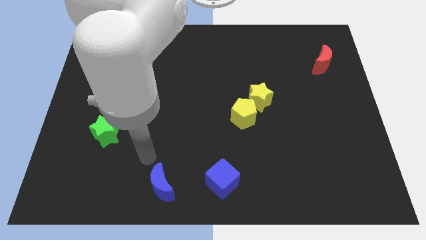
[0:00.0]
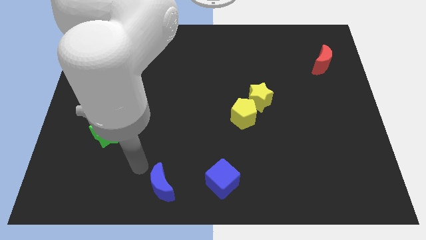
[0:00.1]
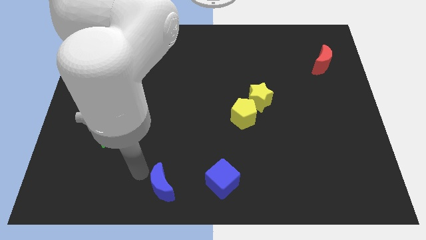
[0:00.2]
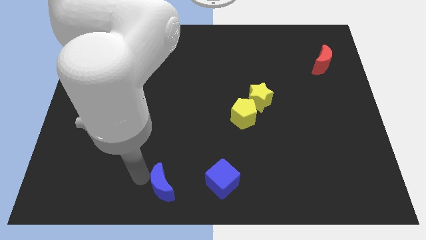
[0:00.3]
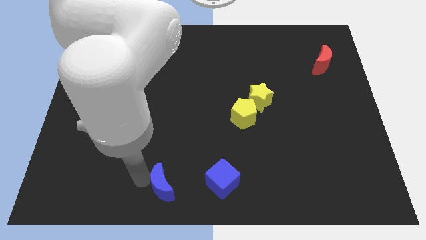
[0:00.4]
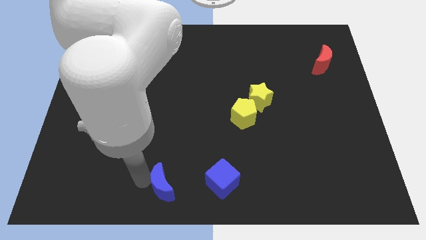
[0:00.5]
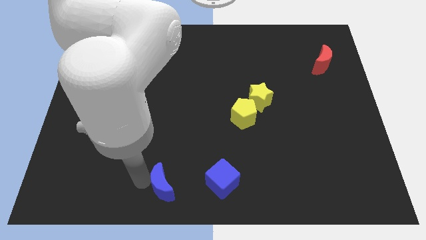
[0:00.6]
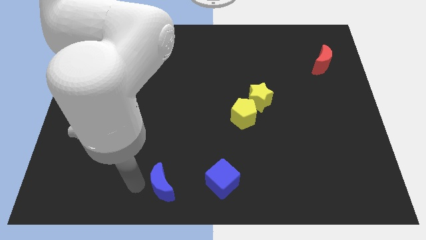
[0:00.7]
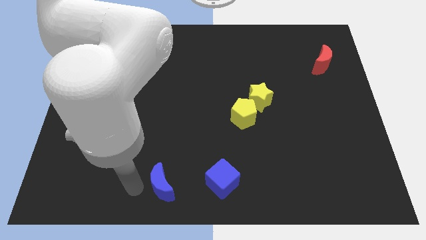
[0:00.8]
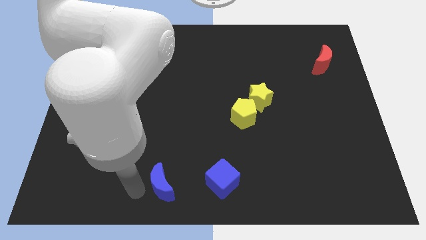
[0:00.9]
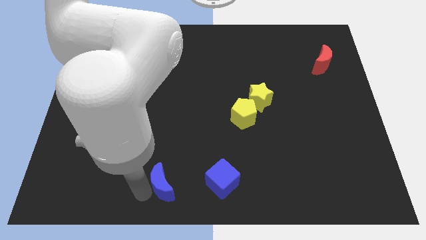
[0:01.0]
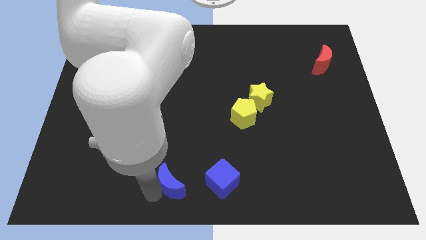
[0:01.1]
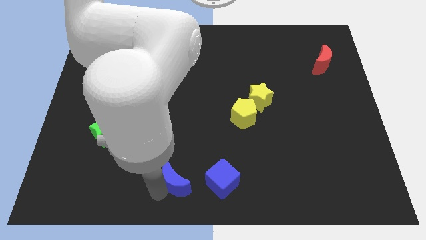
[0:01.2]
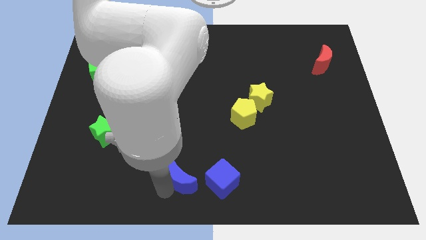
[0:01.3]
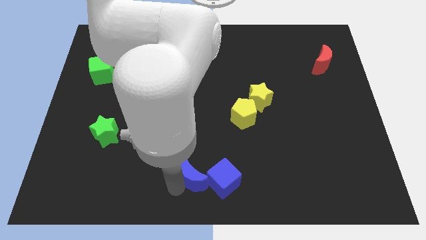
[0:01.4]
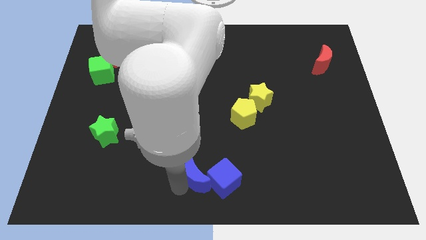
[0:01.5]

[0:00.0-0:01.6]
push the blue crescent into blue square

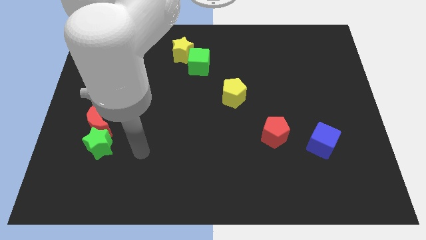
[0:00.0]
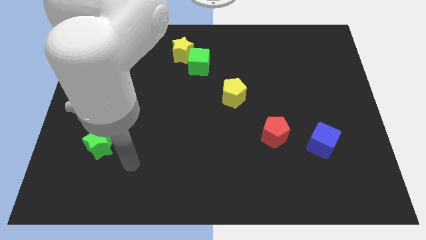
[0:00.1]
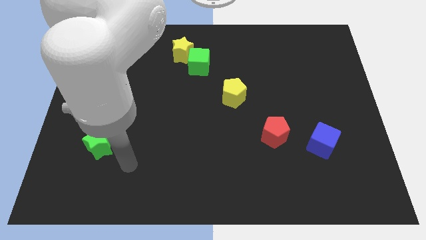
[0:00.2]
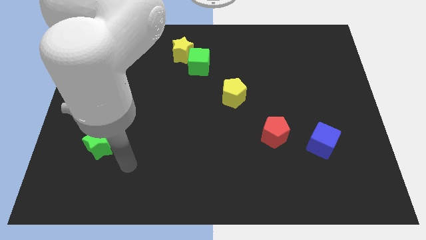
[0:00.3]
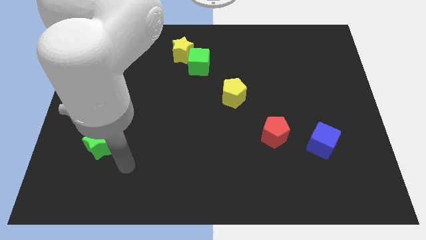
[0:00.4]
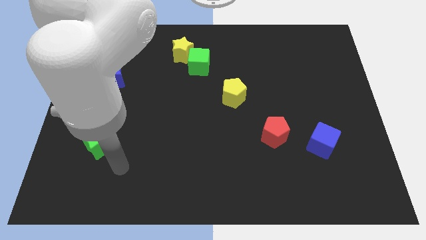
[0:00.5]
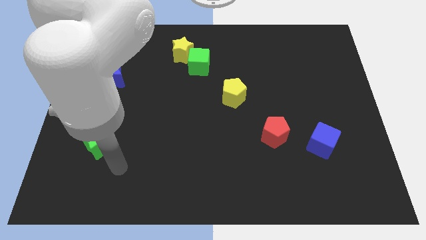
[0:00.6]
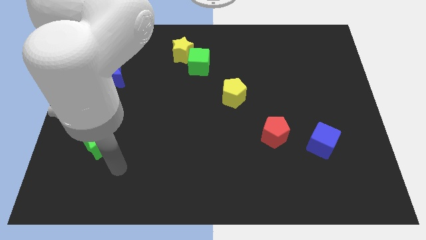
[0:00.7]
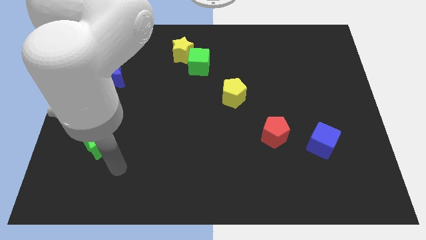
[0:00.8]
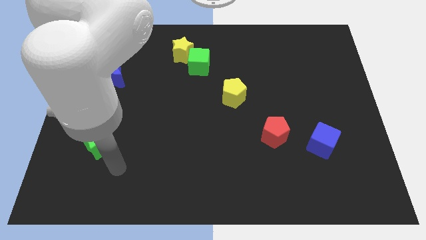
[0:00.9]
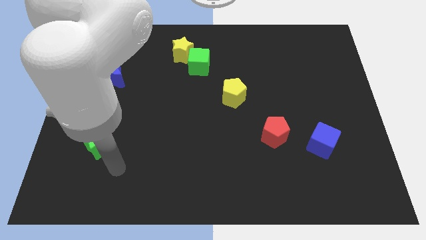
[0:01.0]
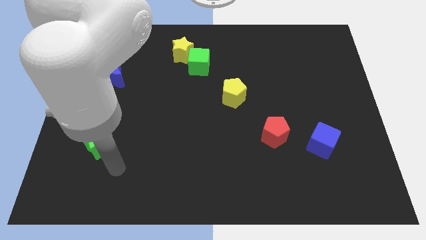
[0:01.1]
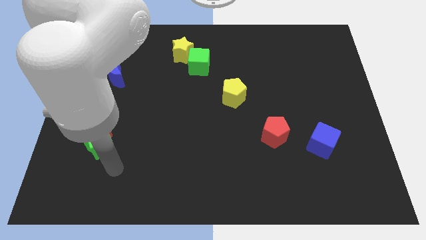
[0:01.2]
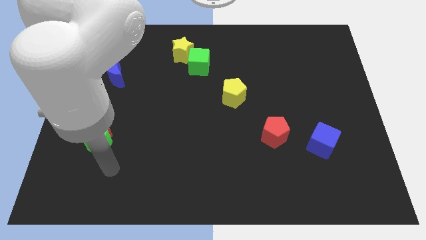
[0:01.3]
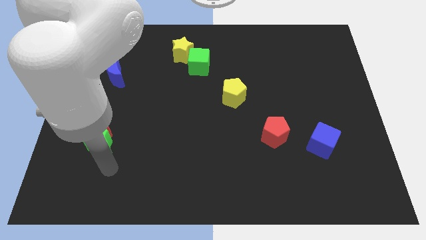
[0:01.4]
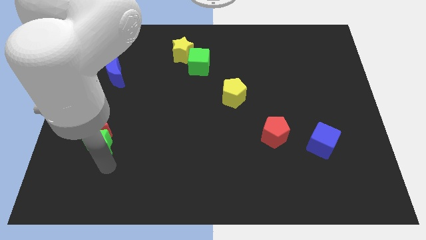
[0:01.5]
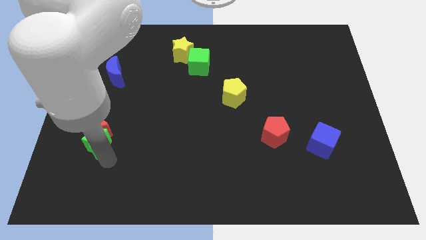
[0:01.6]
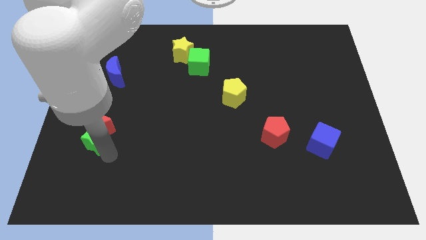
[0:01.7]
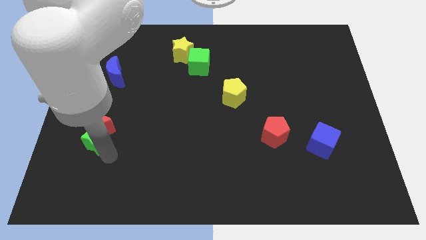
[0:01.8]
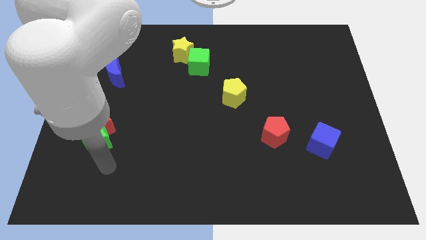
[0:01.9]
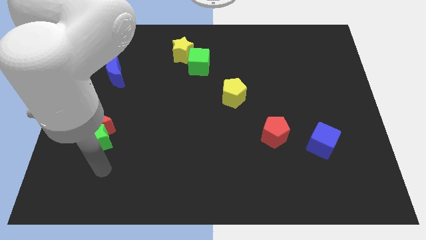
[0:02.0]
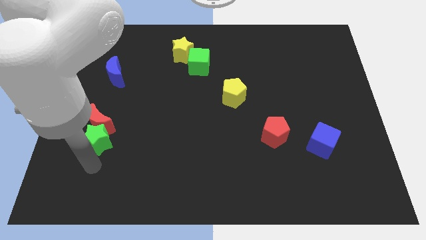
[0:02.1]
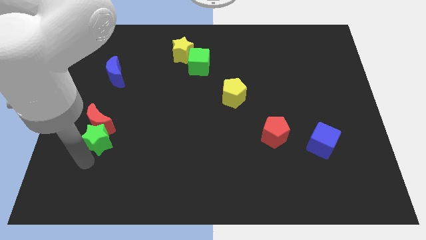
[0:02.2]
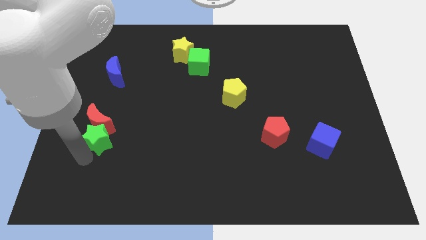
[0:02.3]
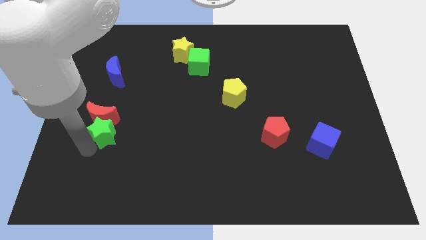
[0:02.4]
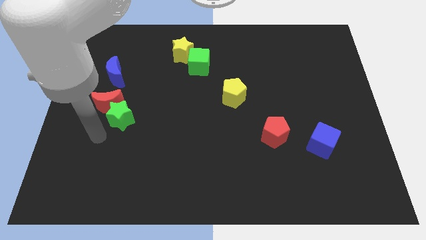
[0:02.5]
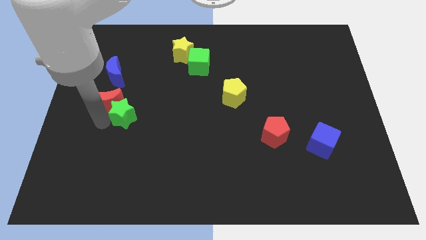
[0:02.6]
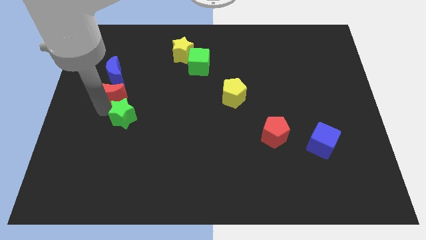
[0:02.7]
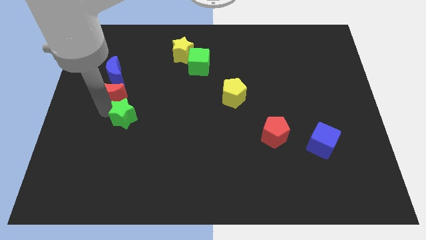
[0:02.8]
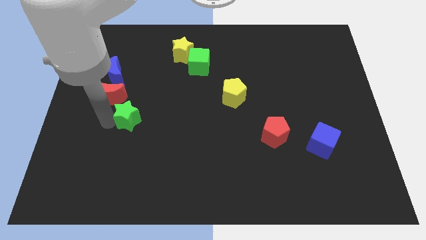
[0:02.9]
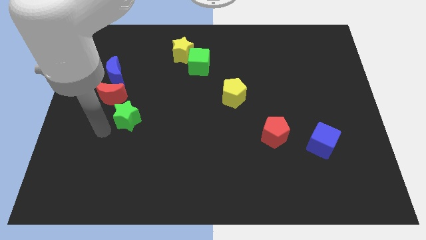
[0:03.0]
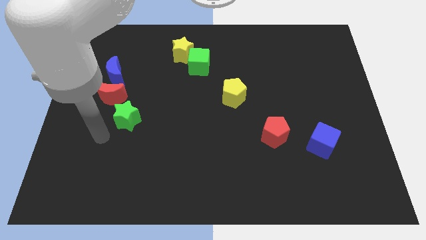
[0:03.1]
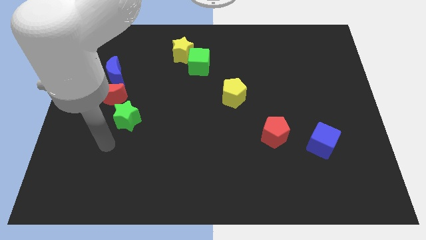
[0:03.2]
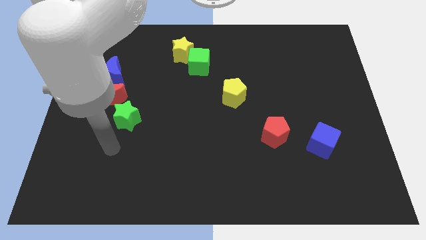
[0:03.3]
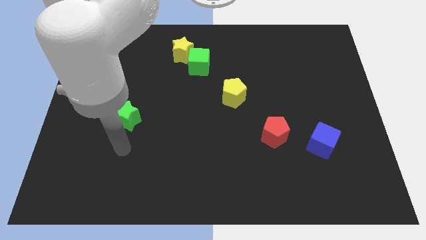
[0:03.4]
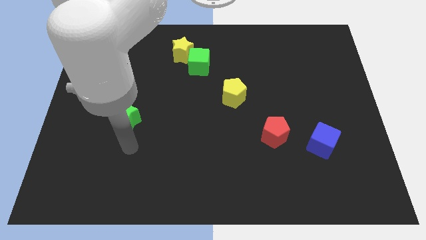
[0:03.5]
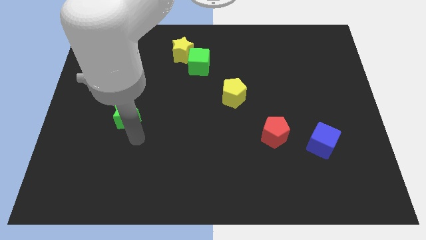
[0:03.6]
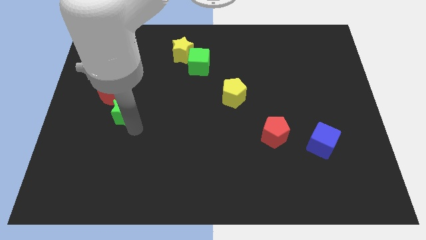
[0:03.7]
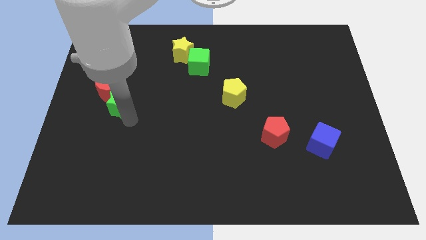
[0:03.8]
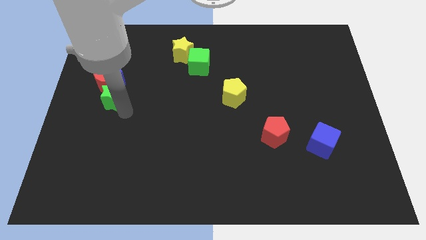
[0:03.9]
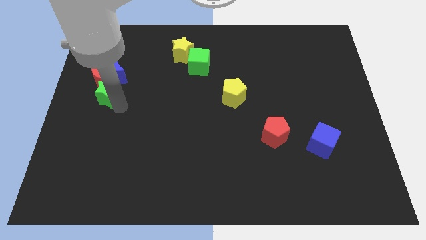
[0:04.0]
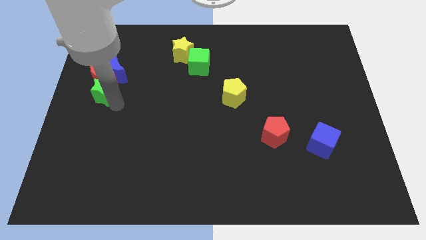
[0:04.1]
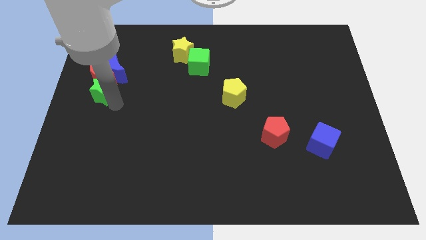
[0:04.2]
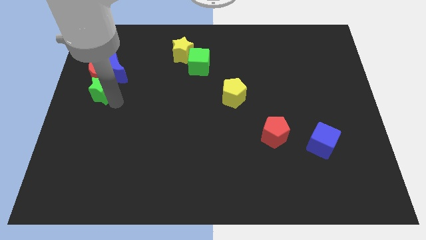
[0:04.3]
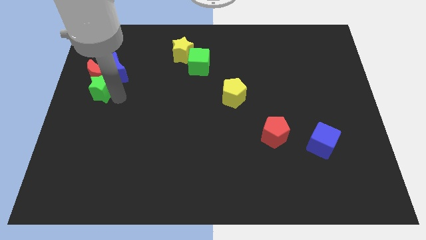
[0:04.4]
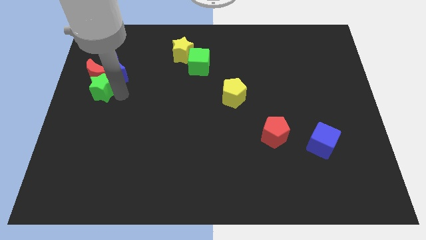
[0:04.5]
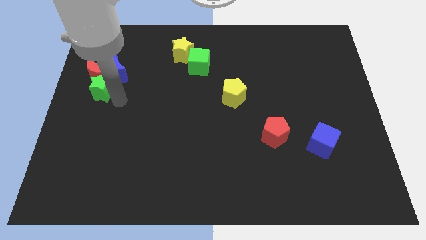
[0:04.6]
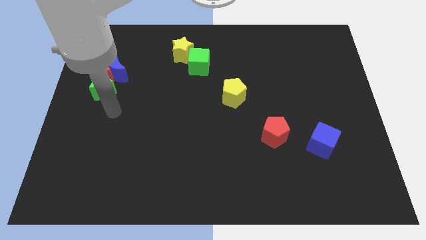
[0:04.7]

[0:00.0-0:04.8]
push the red crescent with the green star towards the top left of the board

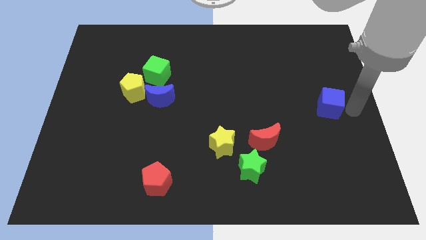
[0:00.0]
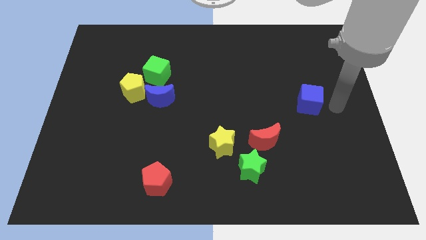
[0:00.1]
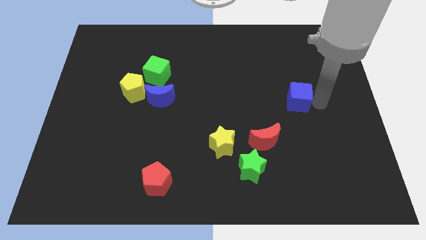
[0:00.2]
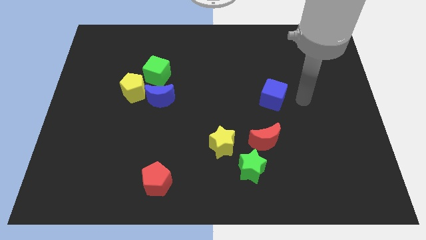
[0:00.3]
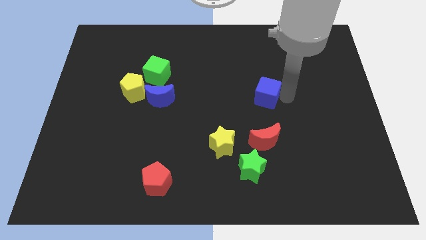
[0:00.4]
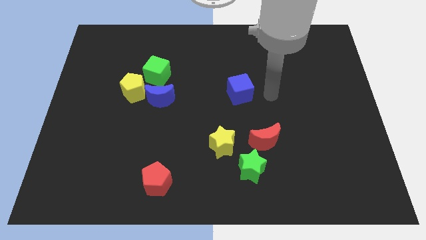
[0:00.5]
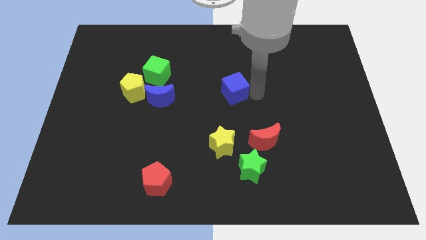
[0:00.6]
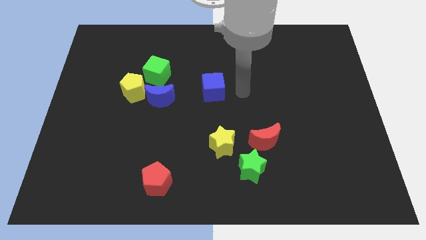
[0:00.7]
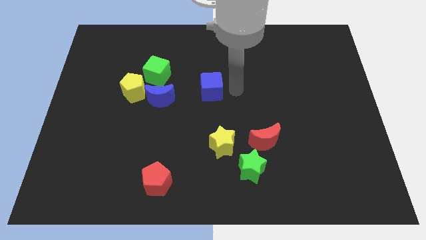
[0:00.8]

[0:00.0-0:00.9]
move the blue cube to the center

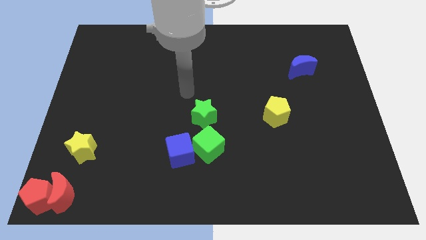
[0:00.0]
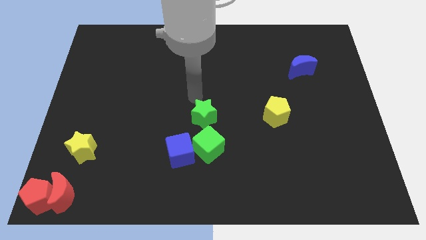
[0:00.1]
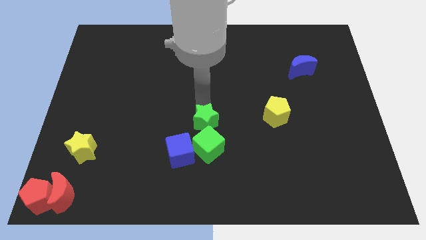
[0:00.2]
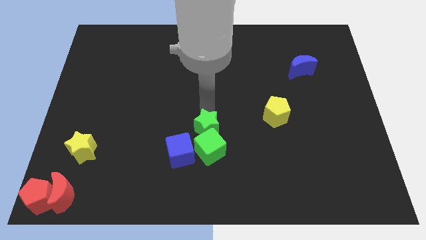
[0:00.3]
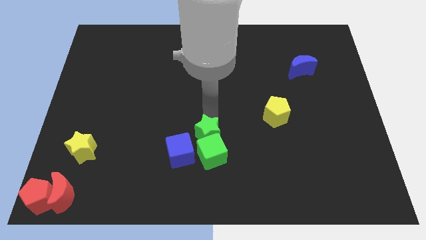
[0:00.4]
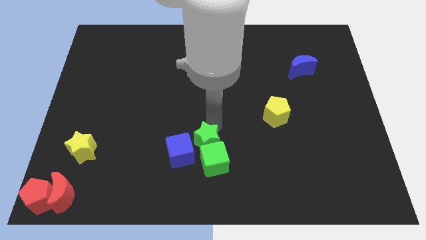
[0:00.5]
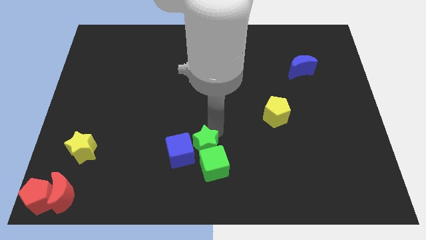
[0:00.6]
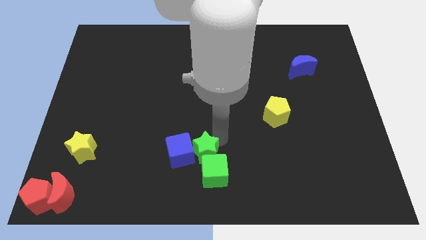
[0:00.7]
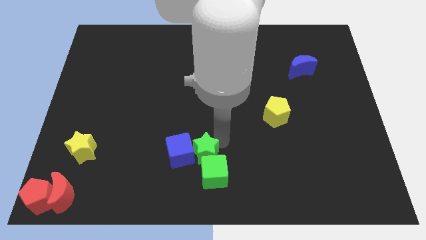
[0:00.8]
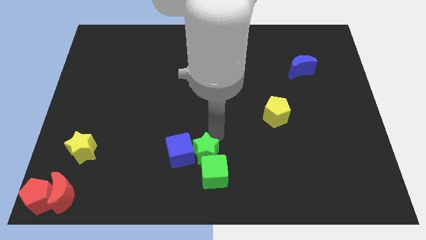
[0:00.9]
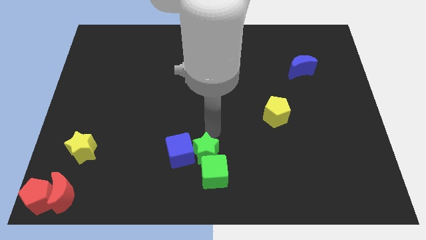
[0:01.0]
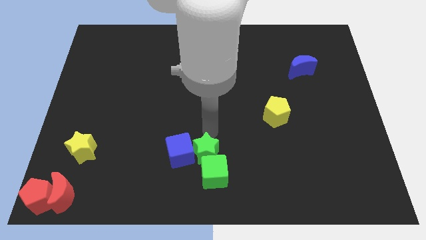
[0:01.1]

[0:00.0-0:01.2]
push the green star into the green cube

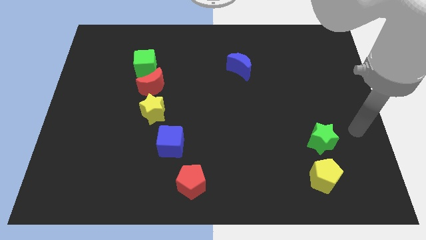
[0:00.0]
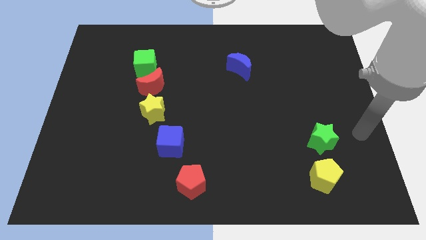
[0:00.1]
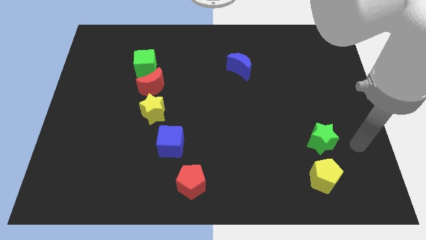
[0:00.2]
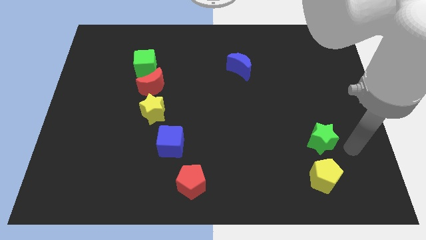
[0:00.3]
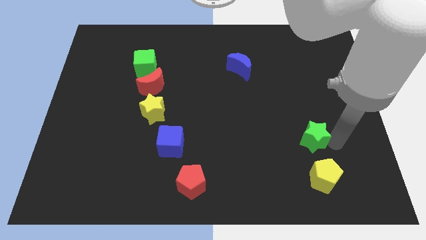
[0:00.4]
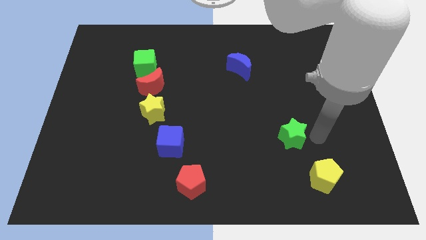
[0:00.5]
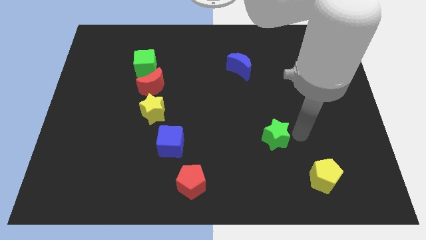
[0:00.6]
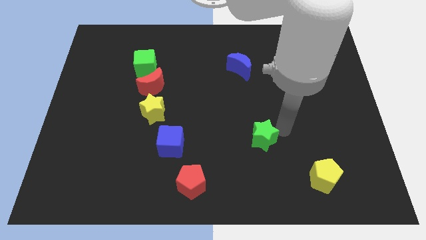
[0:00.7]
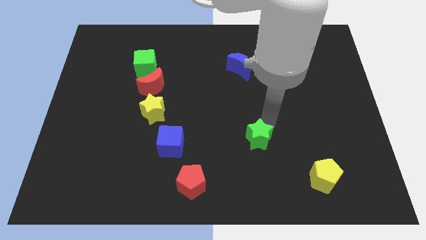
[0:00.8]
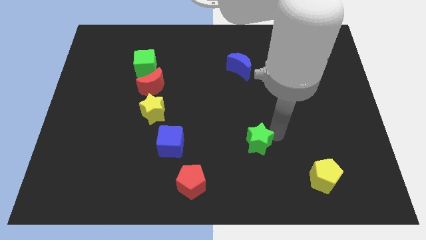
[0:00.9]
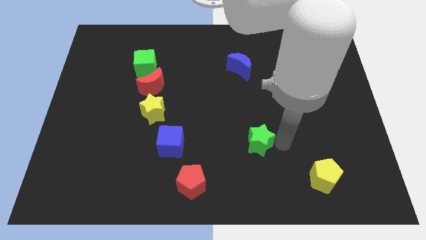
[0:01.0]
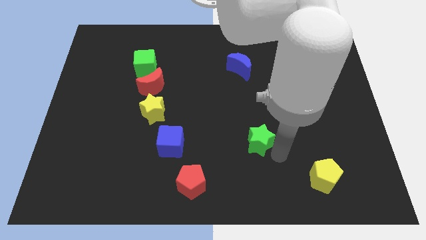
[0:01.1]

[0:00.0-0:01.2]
move the green star slightly to the left
